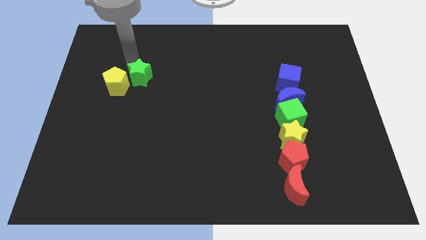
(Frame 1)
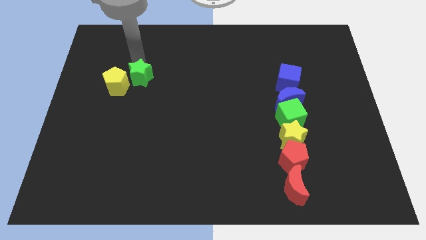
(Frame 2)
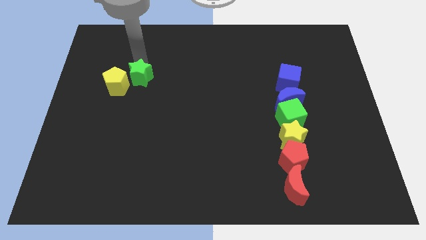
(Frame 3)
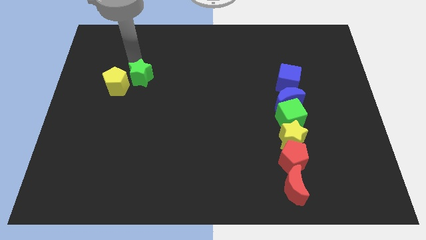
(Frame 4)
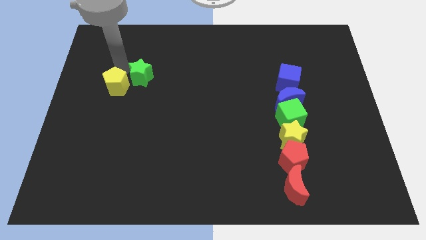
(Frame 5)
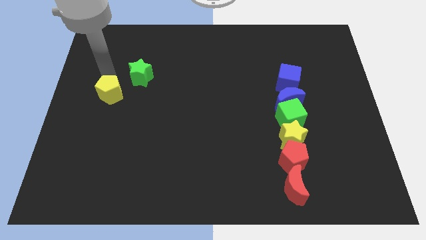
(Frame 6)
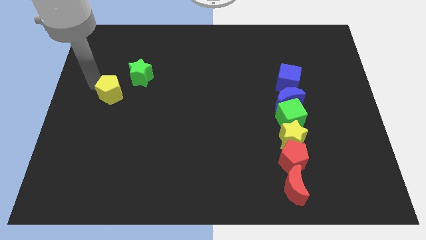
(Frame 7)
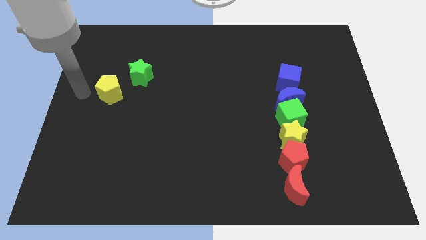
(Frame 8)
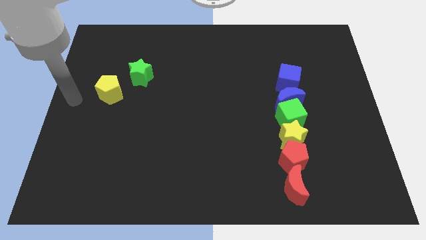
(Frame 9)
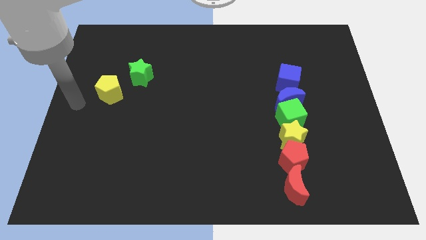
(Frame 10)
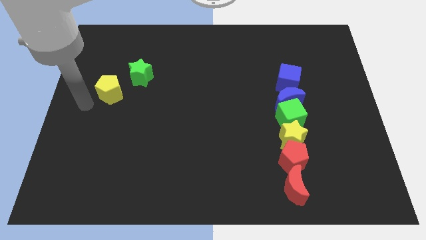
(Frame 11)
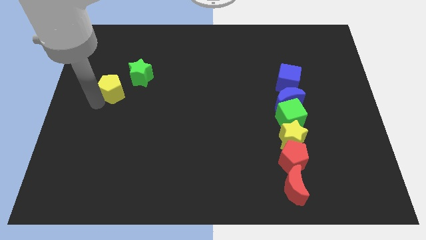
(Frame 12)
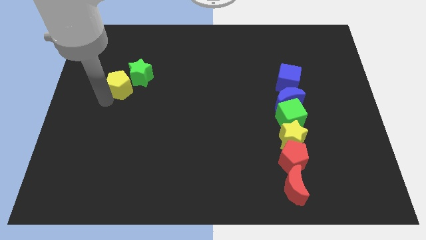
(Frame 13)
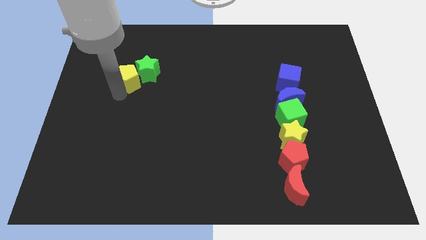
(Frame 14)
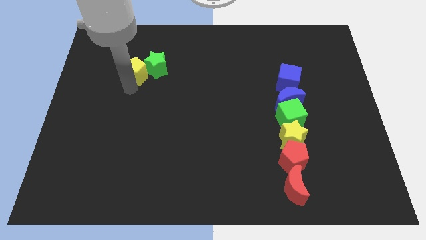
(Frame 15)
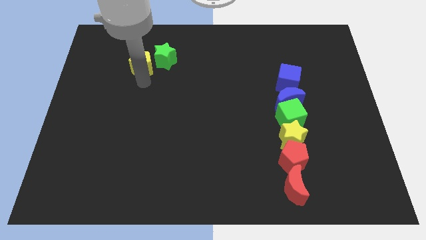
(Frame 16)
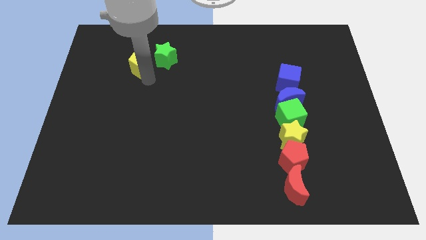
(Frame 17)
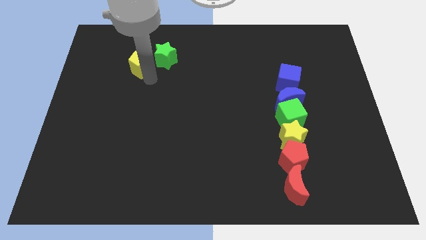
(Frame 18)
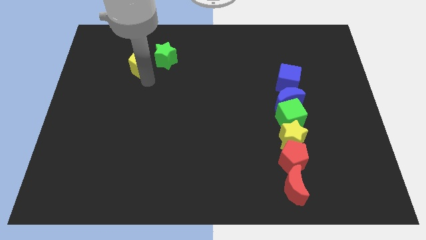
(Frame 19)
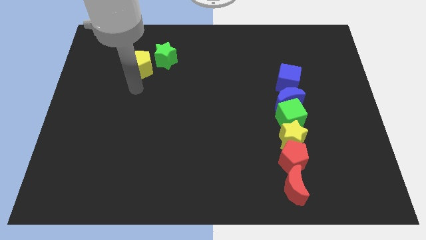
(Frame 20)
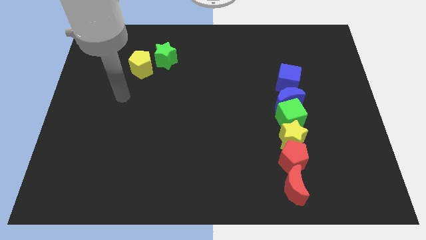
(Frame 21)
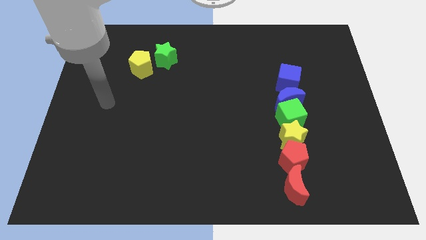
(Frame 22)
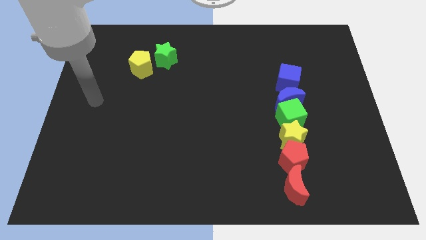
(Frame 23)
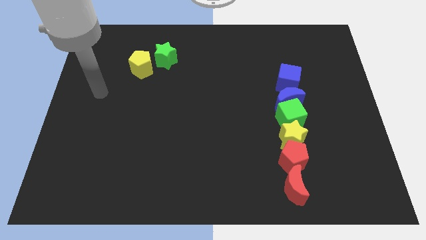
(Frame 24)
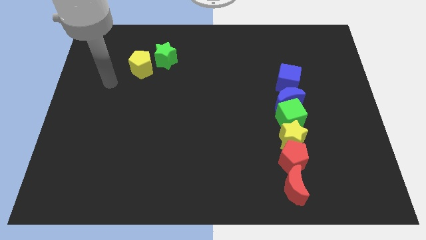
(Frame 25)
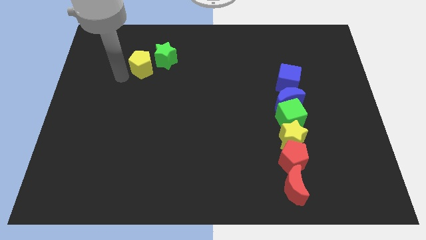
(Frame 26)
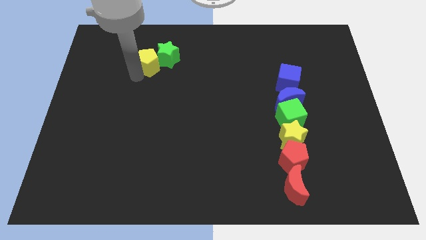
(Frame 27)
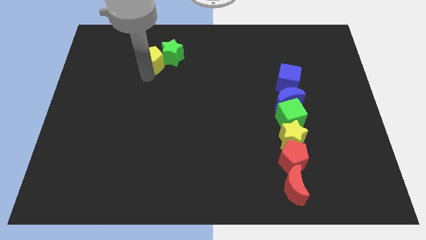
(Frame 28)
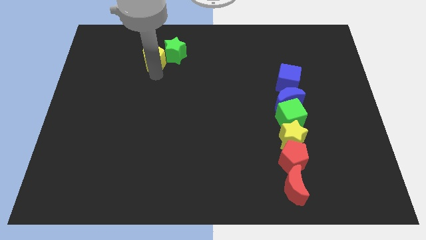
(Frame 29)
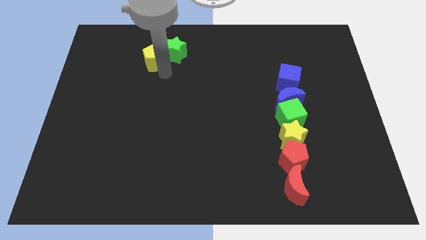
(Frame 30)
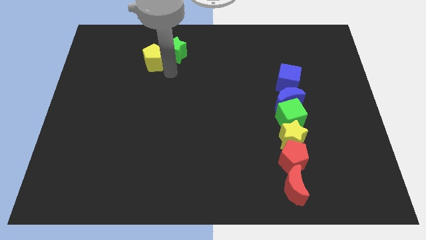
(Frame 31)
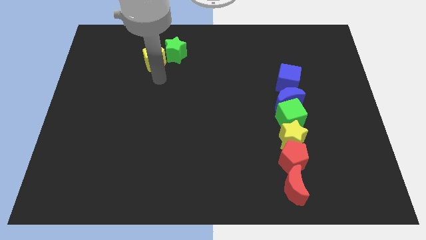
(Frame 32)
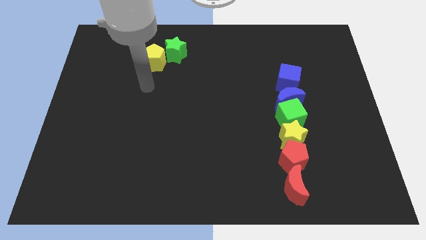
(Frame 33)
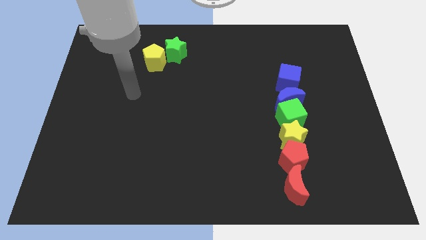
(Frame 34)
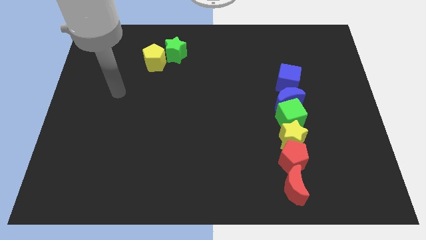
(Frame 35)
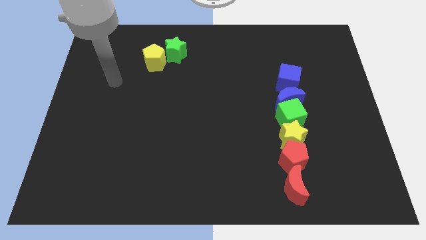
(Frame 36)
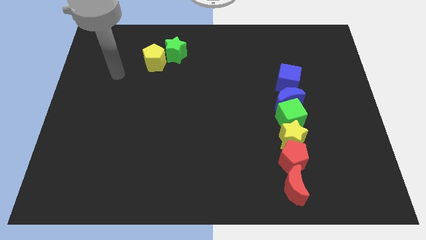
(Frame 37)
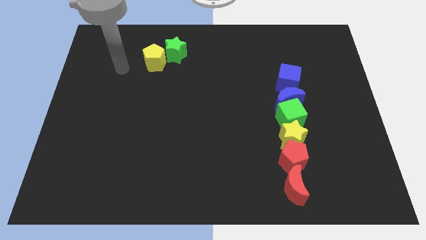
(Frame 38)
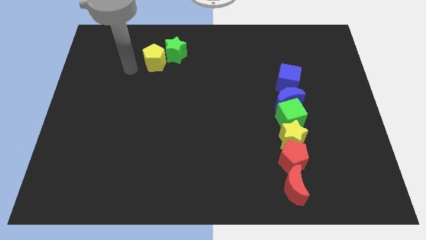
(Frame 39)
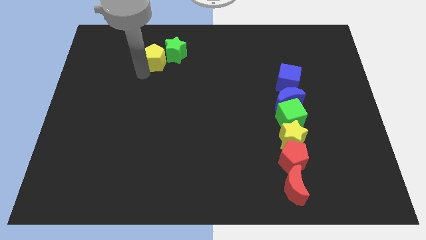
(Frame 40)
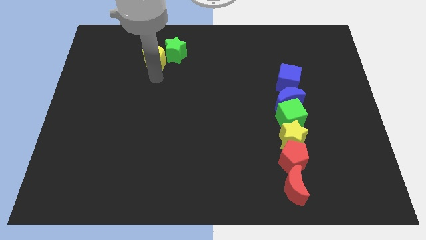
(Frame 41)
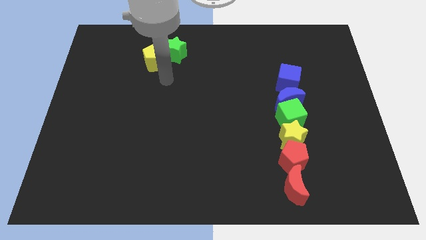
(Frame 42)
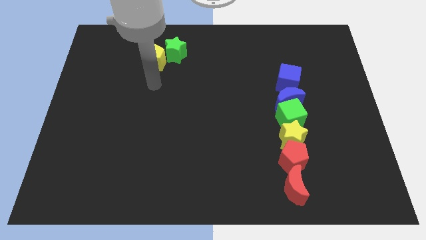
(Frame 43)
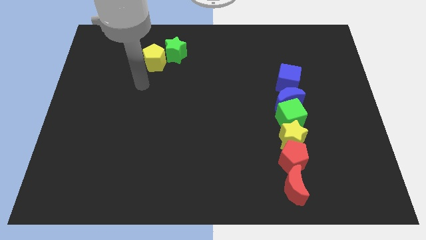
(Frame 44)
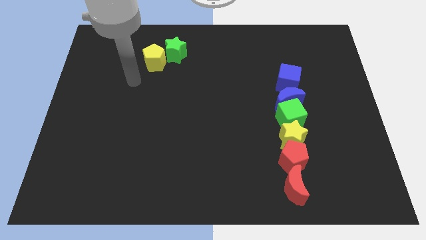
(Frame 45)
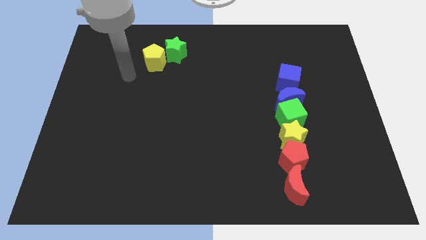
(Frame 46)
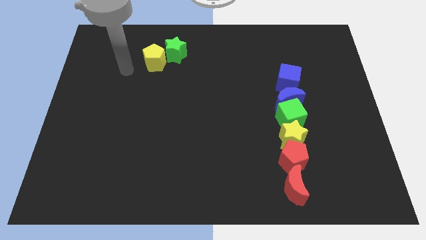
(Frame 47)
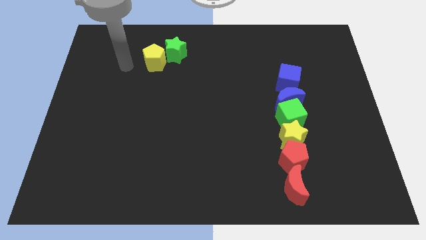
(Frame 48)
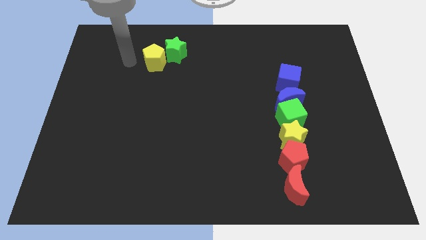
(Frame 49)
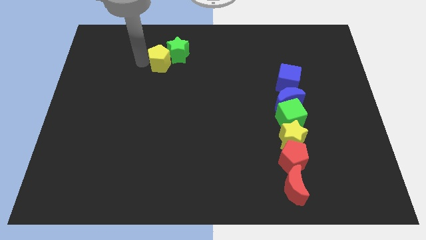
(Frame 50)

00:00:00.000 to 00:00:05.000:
move the yellow pentagon along with the green star towards the top center

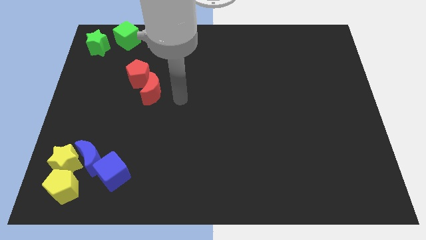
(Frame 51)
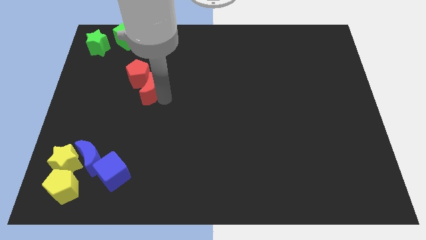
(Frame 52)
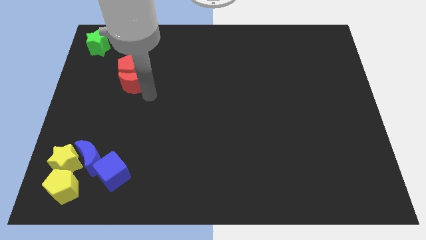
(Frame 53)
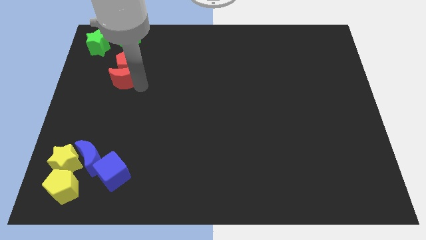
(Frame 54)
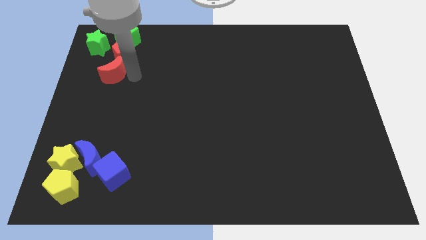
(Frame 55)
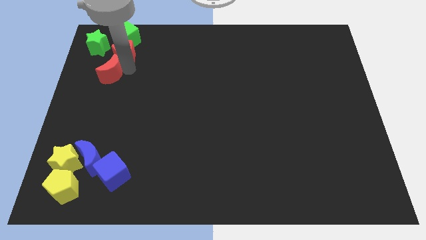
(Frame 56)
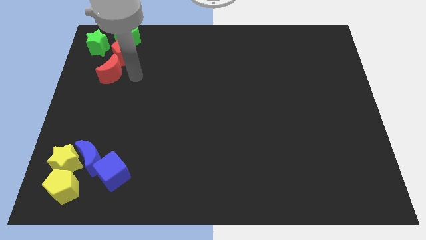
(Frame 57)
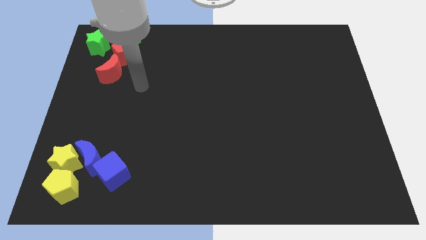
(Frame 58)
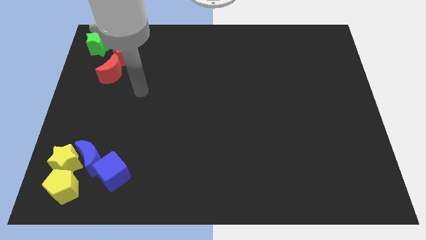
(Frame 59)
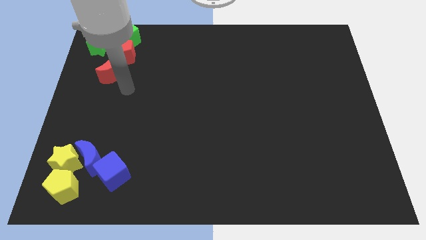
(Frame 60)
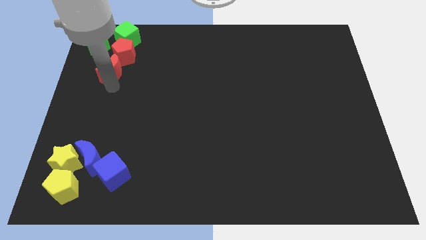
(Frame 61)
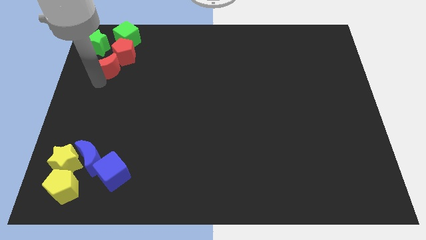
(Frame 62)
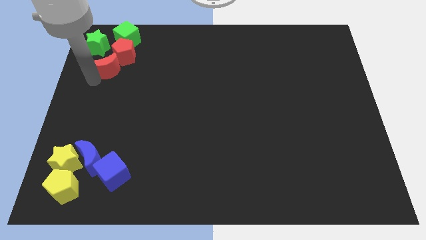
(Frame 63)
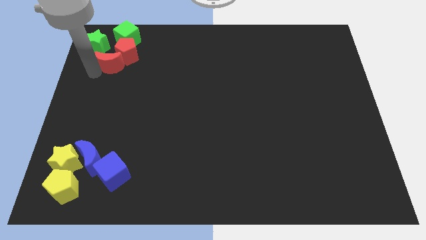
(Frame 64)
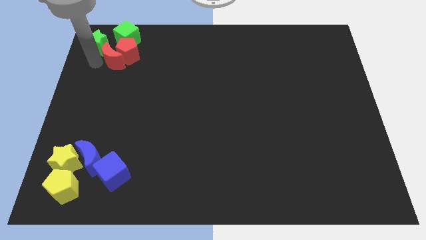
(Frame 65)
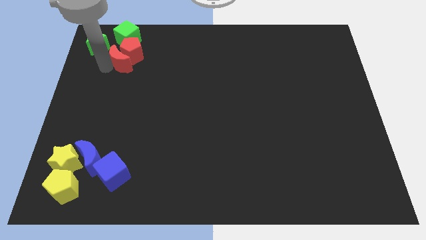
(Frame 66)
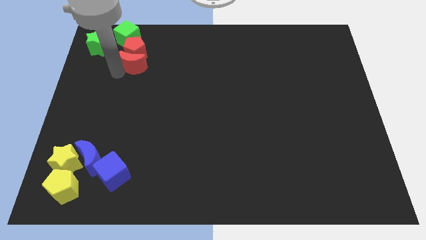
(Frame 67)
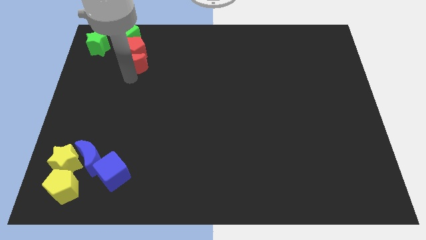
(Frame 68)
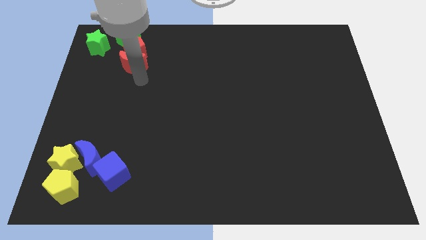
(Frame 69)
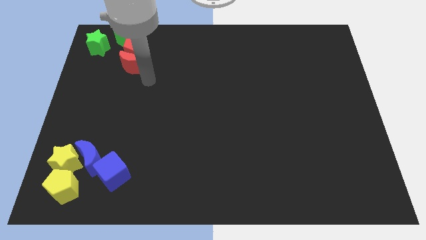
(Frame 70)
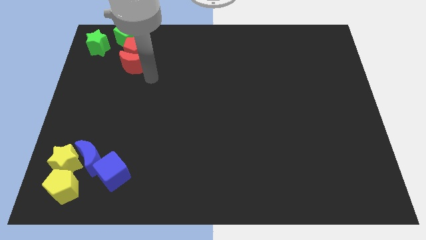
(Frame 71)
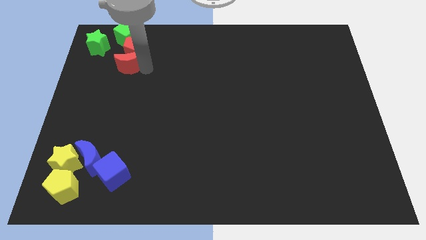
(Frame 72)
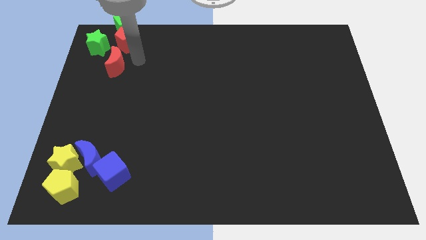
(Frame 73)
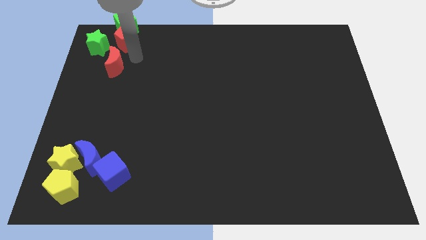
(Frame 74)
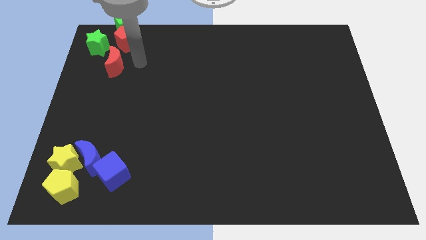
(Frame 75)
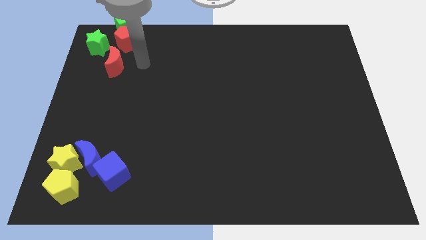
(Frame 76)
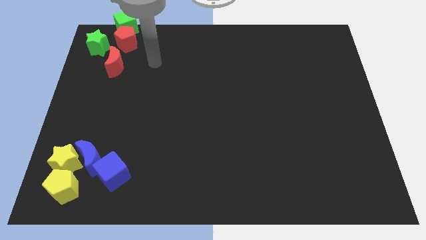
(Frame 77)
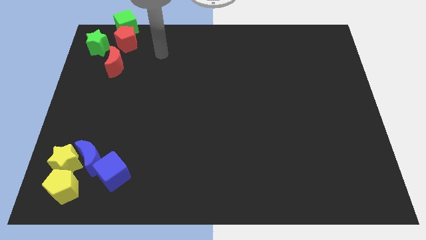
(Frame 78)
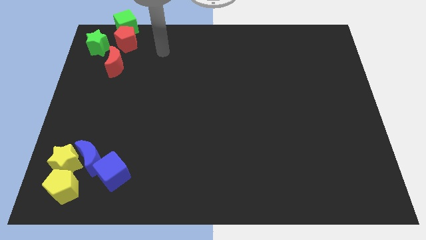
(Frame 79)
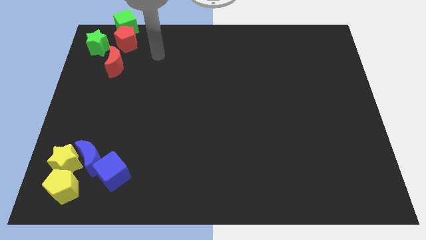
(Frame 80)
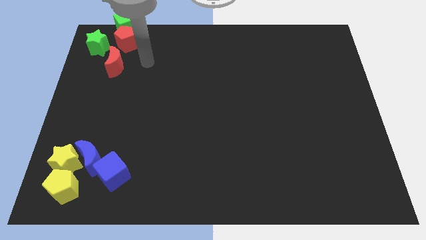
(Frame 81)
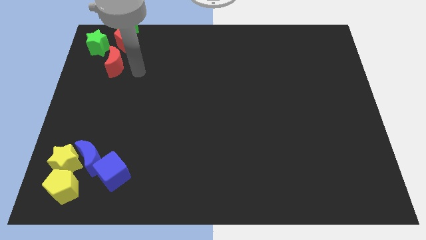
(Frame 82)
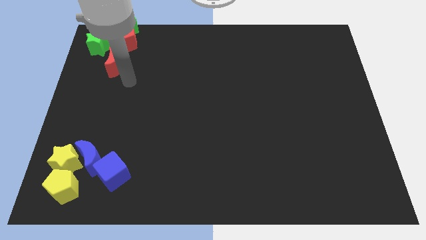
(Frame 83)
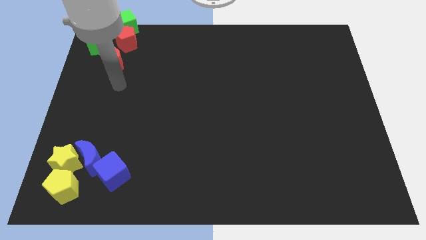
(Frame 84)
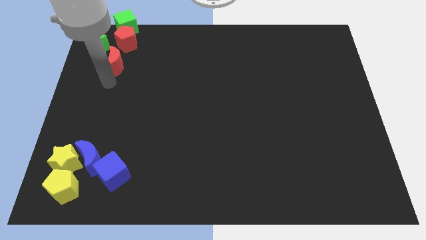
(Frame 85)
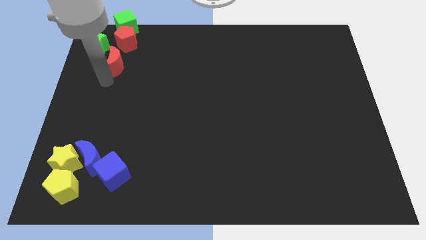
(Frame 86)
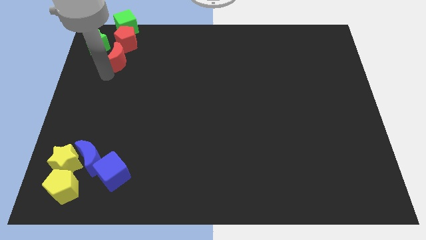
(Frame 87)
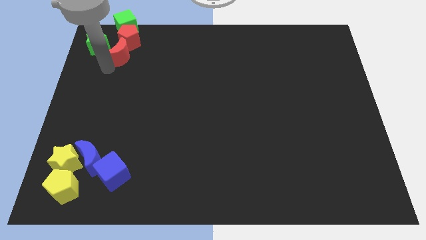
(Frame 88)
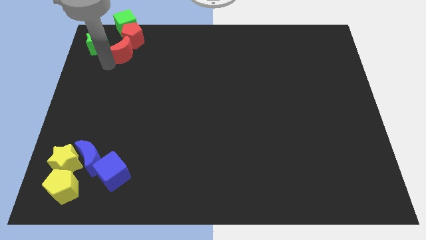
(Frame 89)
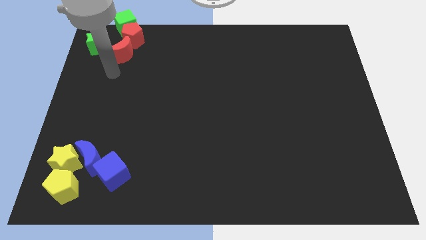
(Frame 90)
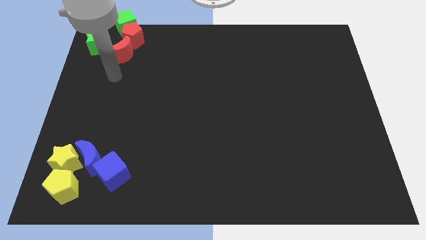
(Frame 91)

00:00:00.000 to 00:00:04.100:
move the red blocks into the green cube
